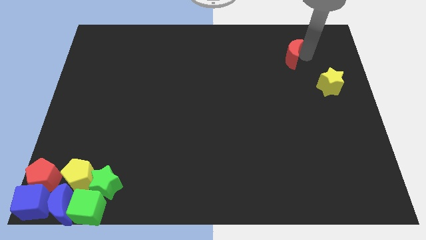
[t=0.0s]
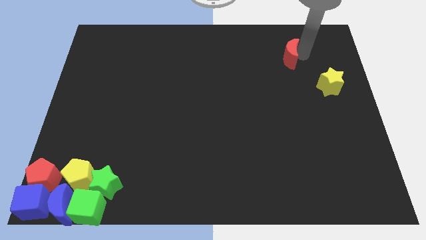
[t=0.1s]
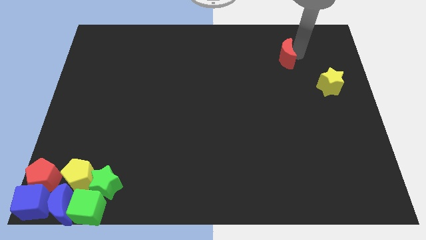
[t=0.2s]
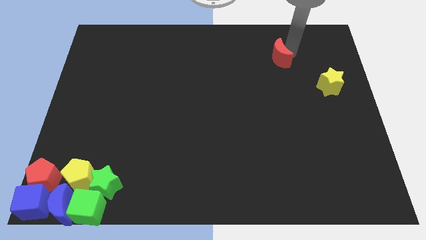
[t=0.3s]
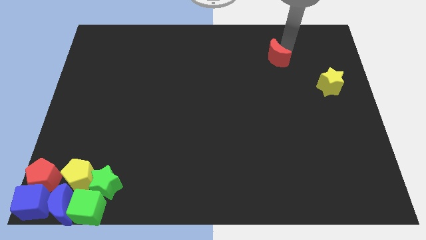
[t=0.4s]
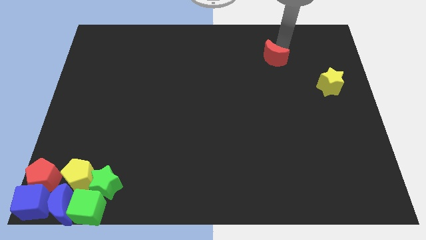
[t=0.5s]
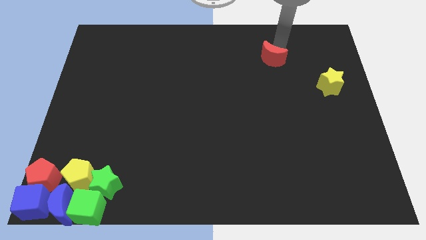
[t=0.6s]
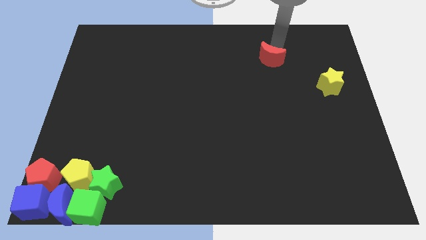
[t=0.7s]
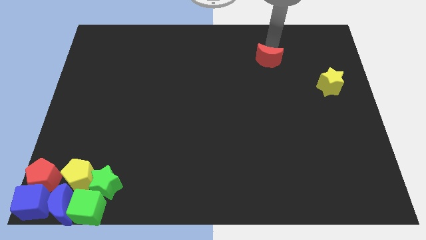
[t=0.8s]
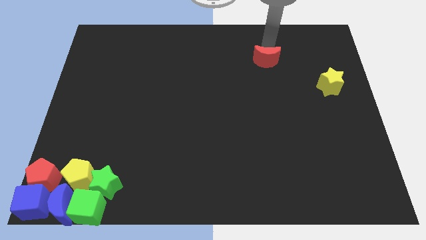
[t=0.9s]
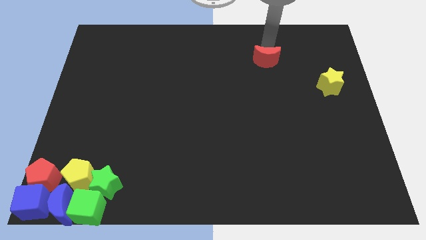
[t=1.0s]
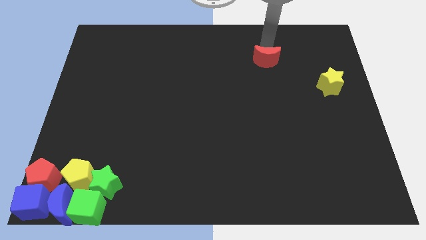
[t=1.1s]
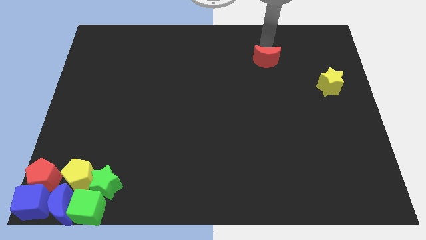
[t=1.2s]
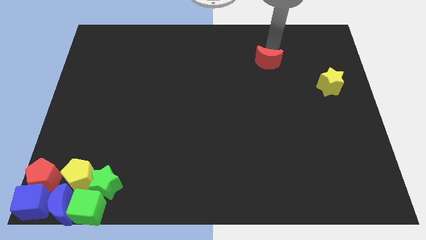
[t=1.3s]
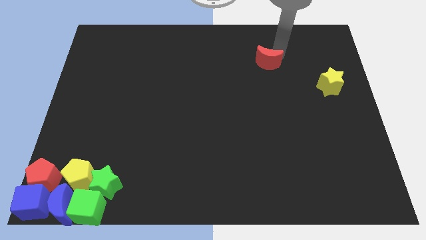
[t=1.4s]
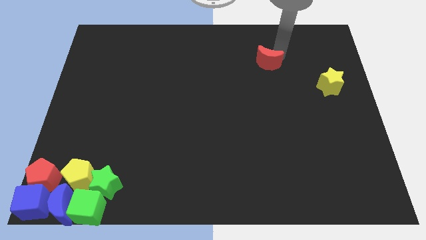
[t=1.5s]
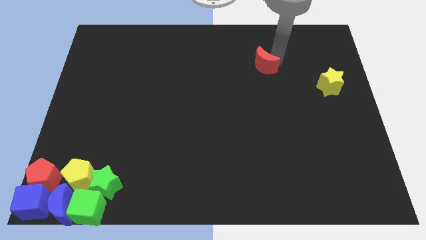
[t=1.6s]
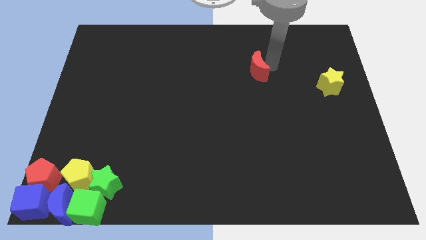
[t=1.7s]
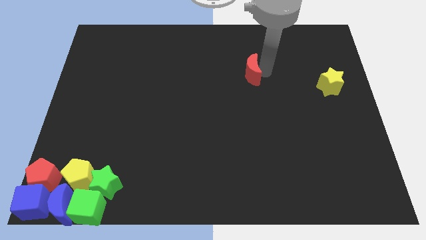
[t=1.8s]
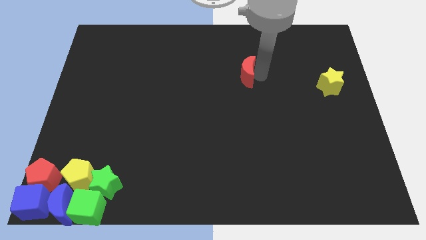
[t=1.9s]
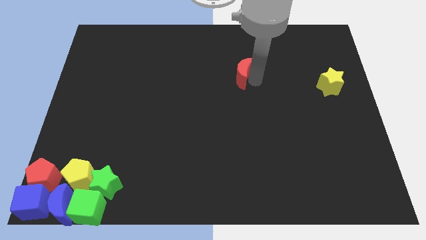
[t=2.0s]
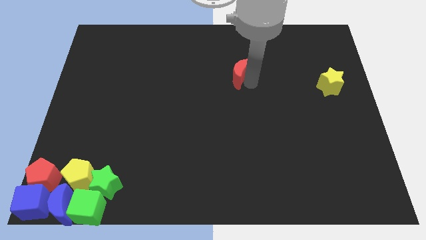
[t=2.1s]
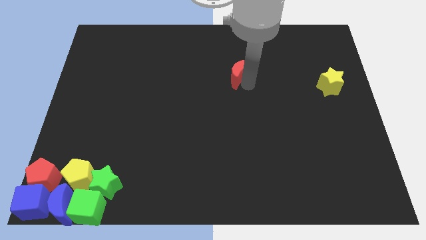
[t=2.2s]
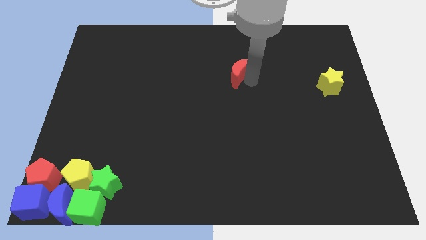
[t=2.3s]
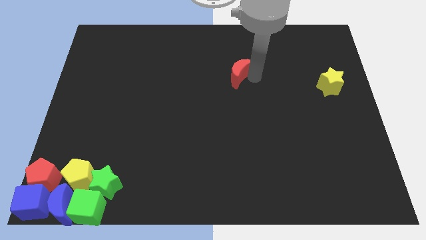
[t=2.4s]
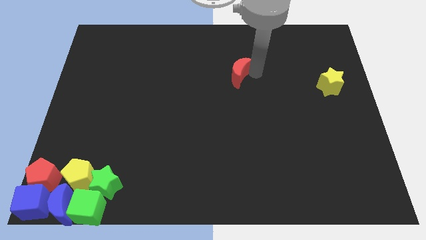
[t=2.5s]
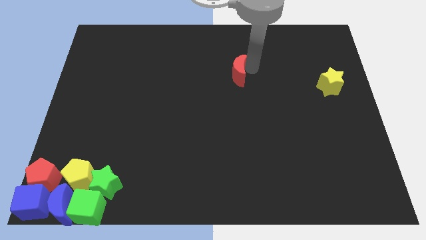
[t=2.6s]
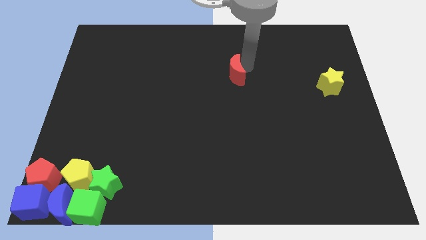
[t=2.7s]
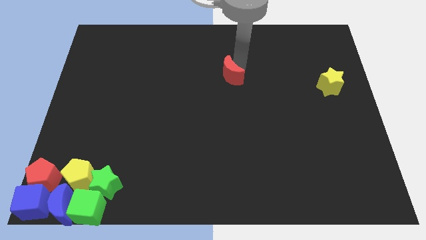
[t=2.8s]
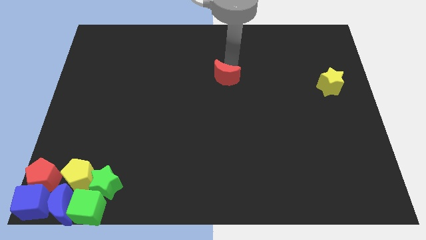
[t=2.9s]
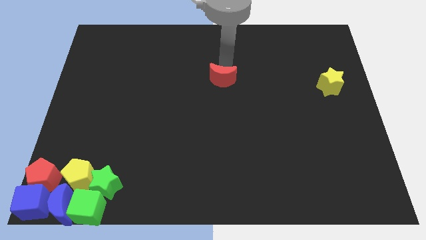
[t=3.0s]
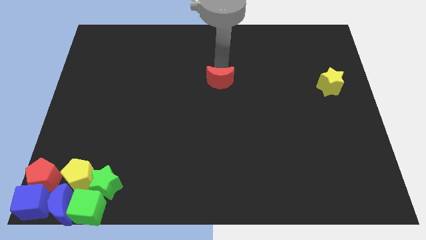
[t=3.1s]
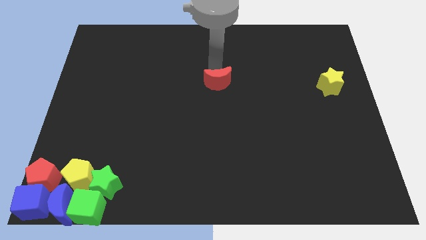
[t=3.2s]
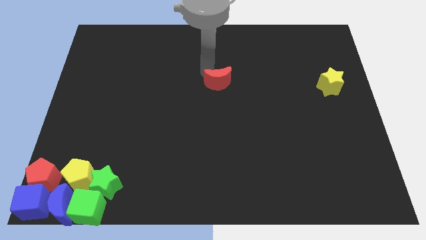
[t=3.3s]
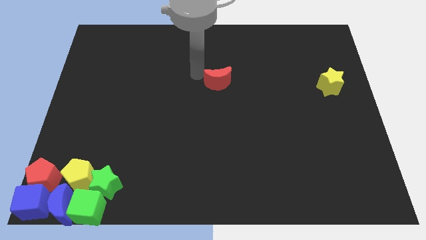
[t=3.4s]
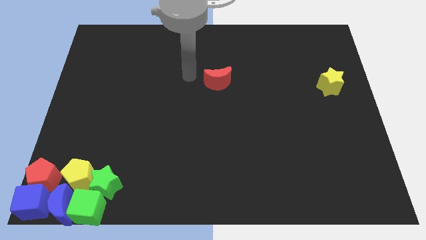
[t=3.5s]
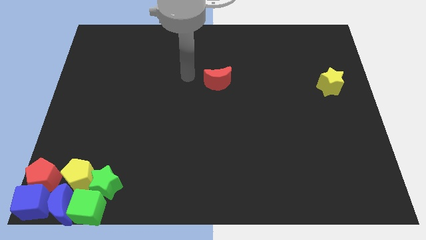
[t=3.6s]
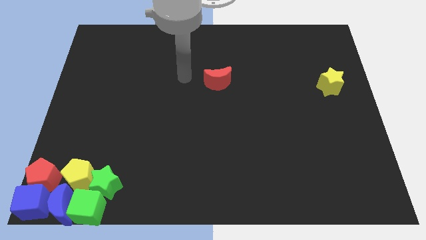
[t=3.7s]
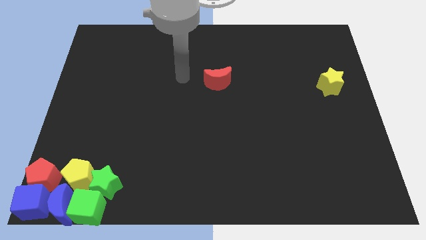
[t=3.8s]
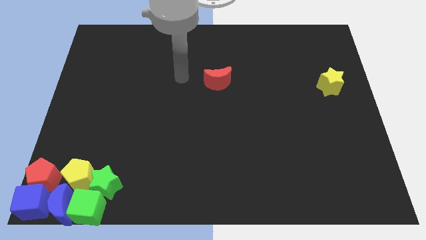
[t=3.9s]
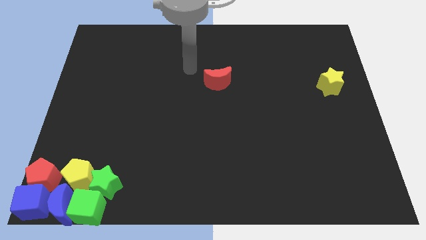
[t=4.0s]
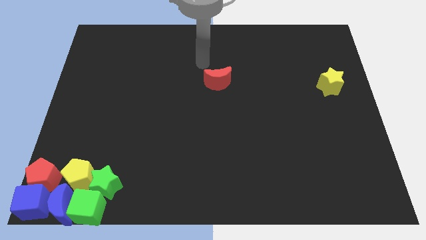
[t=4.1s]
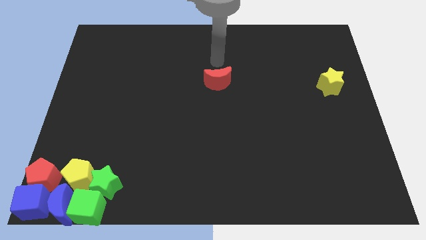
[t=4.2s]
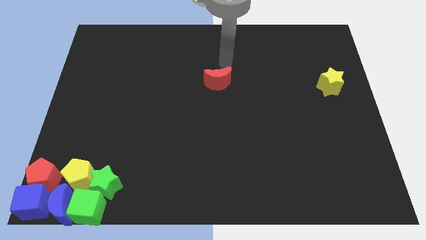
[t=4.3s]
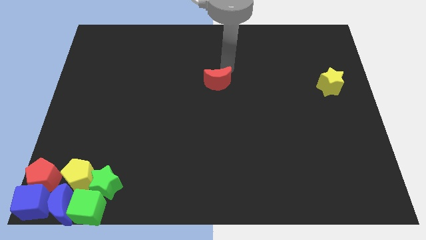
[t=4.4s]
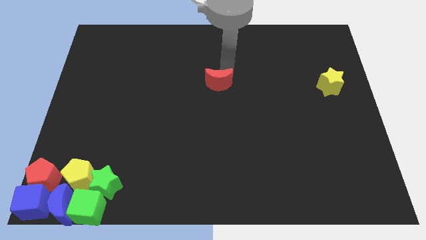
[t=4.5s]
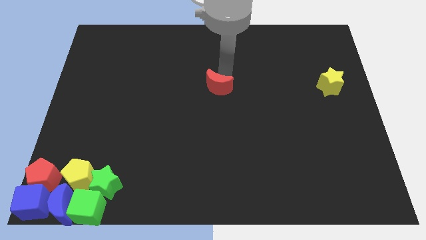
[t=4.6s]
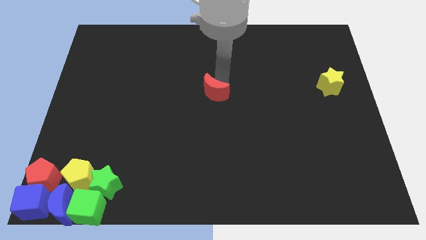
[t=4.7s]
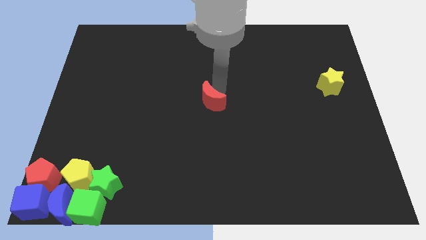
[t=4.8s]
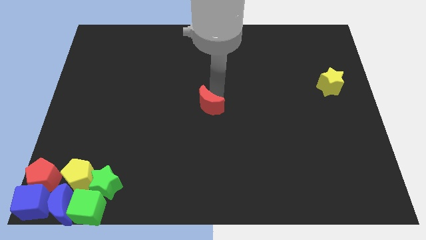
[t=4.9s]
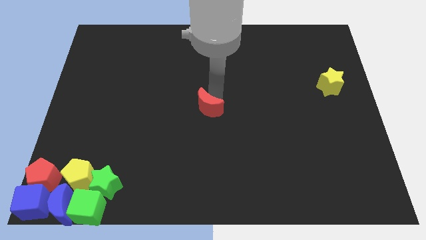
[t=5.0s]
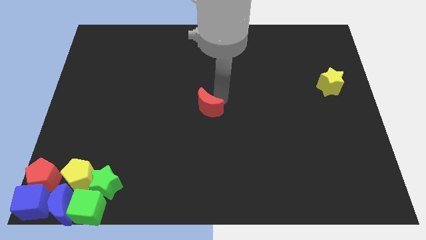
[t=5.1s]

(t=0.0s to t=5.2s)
push the red crescent to the center of the board

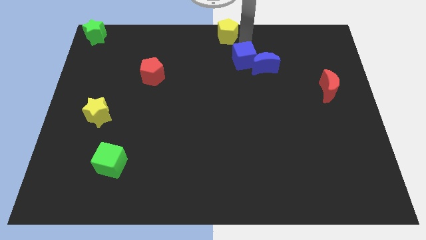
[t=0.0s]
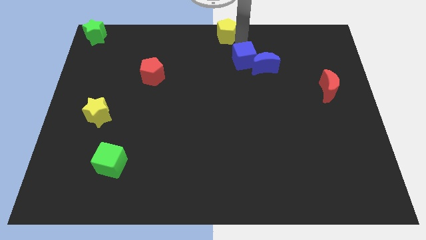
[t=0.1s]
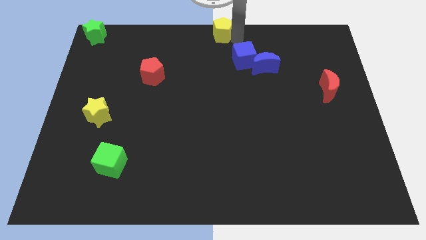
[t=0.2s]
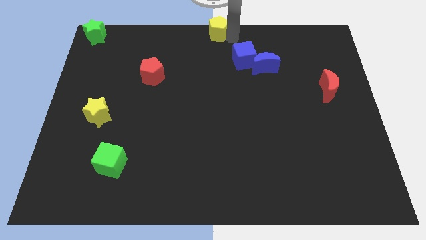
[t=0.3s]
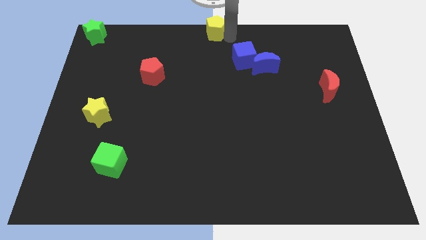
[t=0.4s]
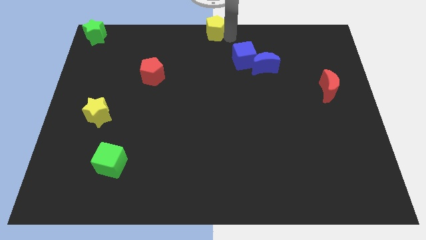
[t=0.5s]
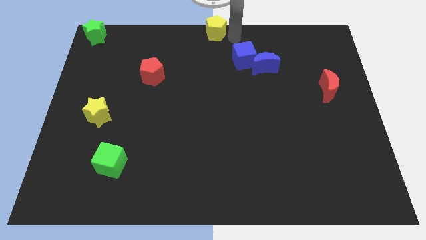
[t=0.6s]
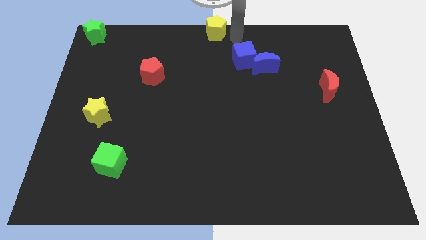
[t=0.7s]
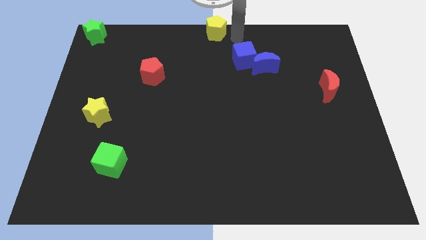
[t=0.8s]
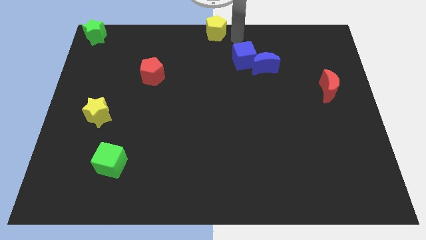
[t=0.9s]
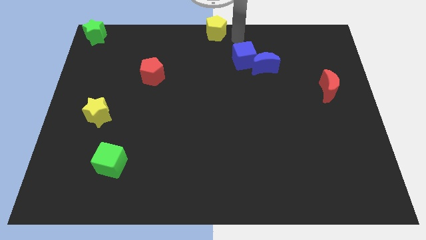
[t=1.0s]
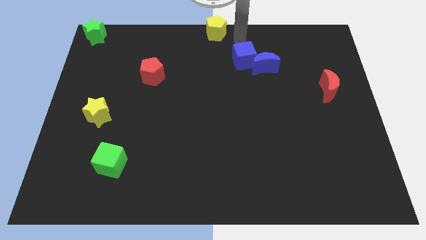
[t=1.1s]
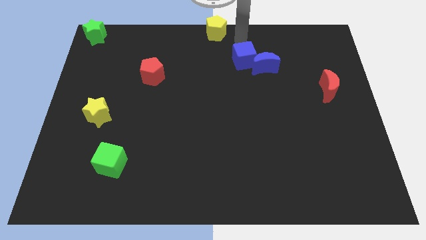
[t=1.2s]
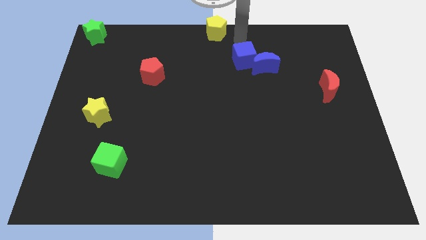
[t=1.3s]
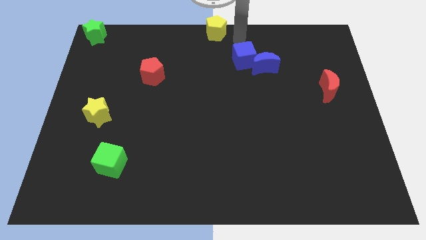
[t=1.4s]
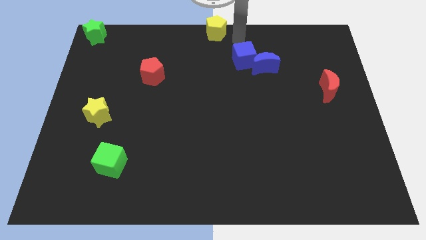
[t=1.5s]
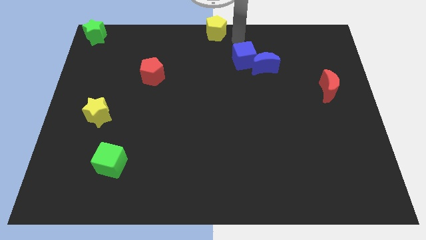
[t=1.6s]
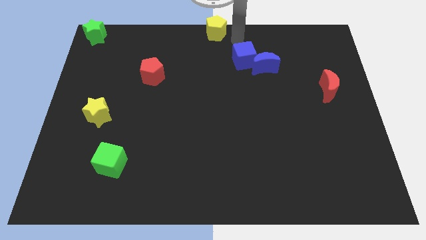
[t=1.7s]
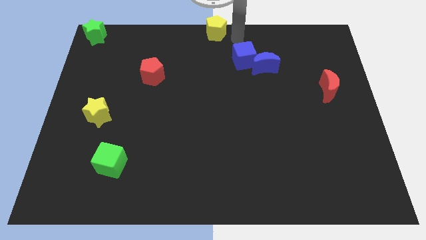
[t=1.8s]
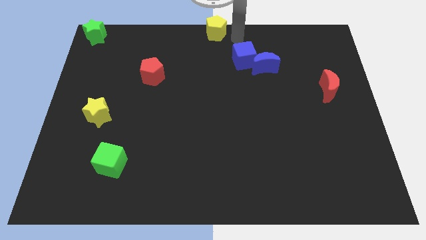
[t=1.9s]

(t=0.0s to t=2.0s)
push the yellow pentagon to the top center of the board

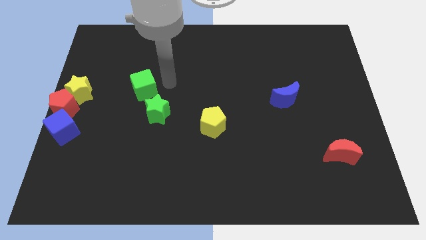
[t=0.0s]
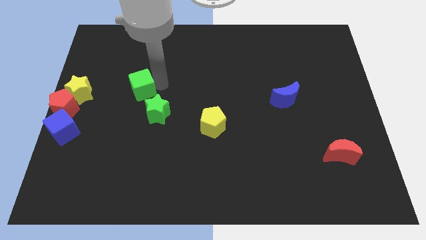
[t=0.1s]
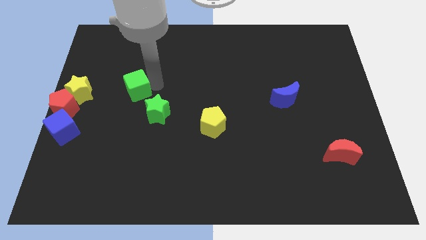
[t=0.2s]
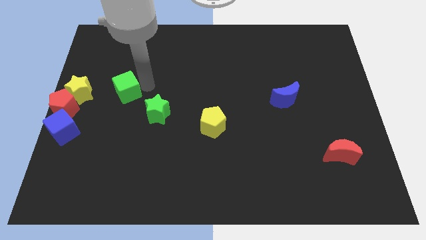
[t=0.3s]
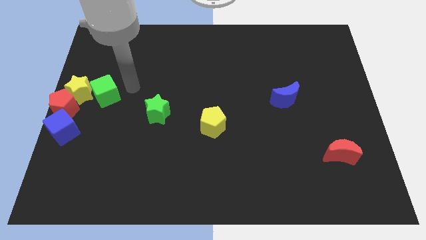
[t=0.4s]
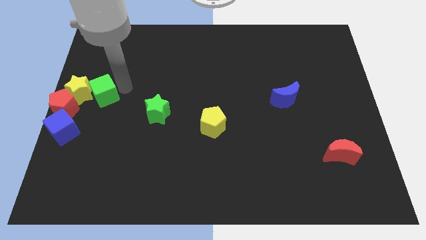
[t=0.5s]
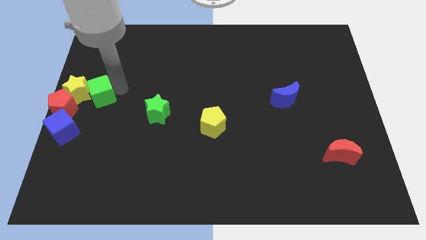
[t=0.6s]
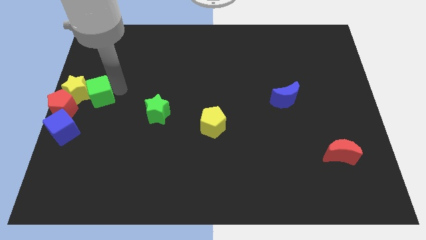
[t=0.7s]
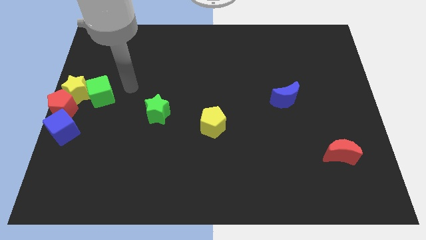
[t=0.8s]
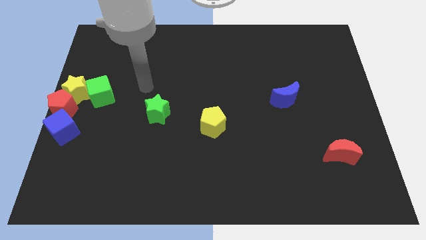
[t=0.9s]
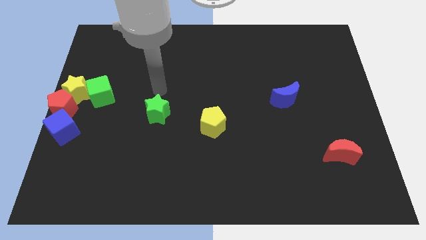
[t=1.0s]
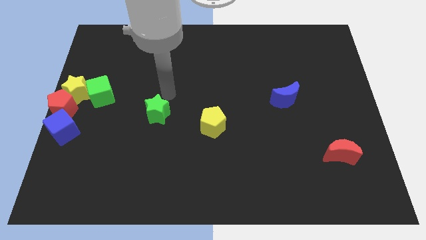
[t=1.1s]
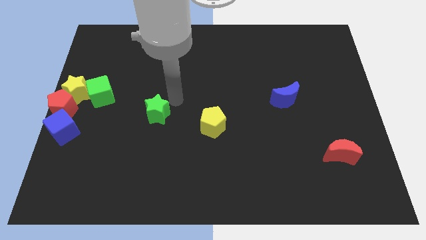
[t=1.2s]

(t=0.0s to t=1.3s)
push the green cube into the group of blocksa

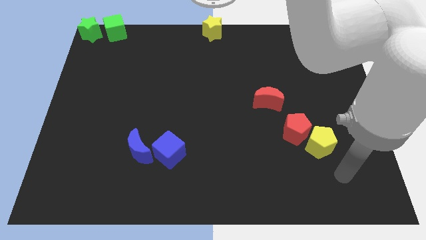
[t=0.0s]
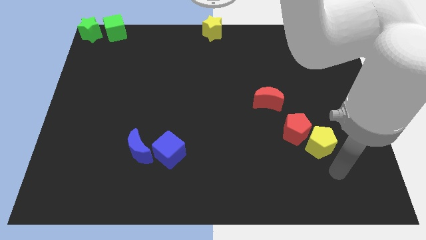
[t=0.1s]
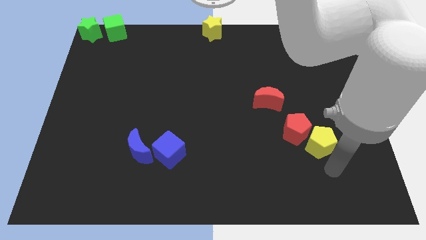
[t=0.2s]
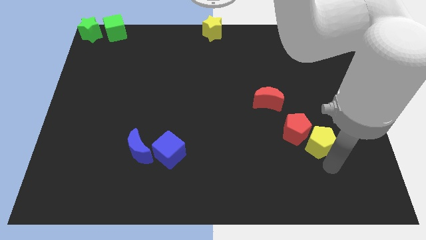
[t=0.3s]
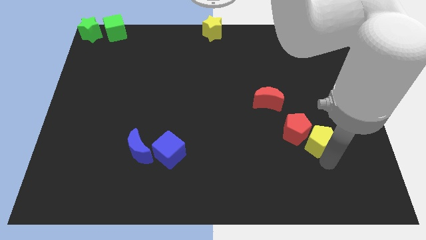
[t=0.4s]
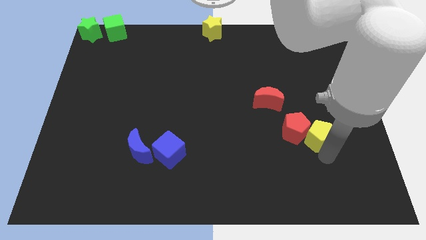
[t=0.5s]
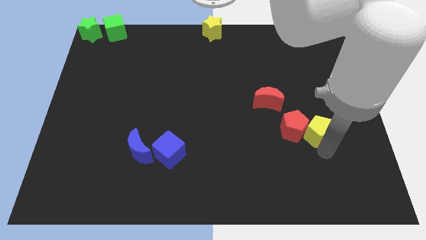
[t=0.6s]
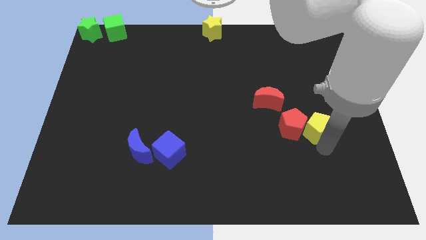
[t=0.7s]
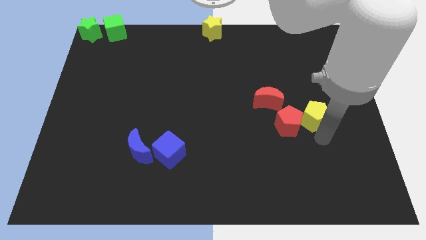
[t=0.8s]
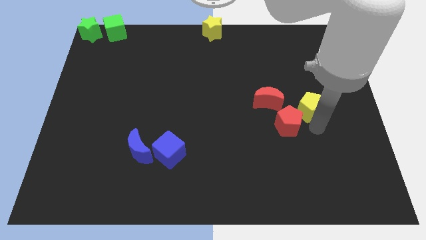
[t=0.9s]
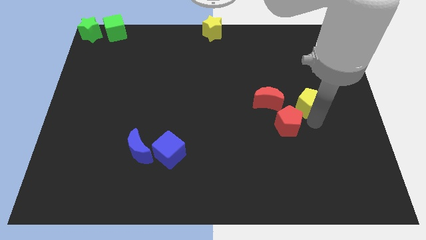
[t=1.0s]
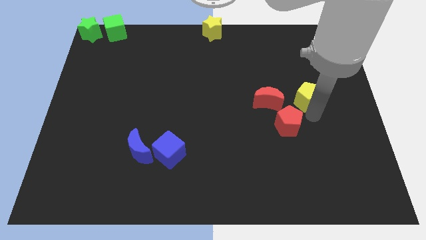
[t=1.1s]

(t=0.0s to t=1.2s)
place yellow pentagon to the right of red moon
